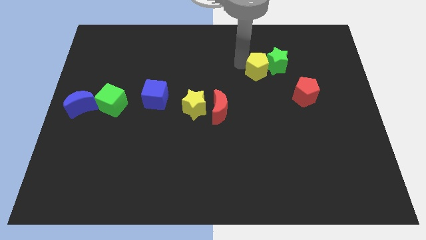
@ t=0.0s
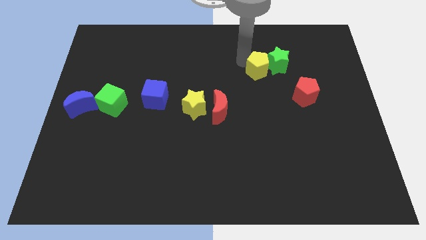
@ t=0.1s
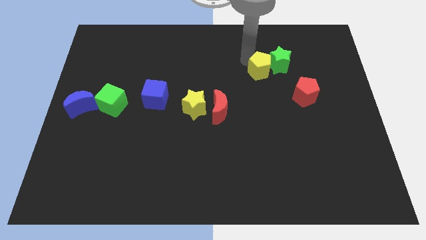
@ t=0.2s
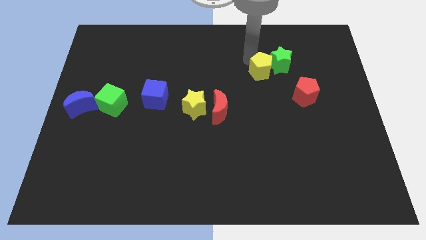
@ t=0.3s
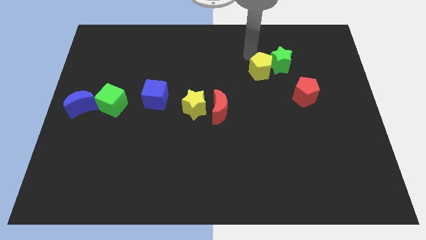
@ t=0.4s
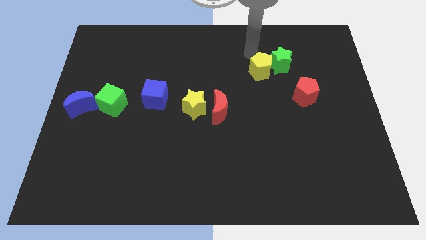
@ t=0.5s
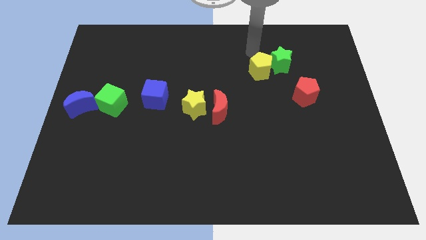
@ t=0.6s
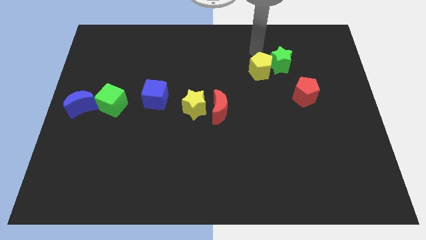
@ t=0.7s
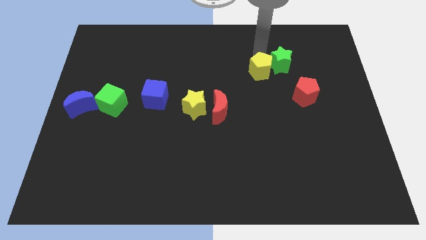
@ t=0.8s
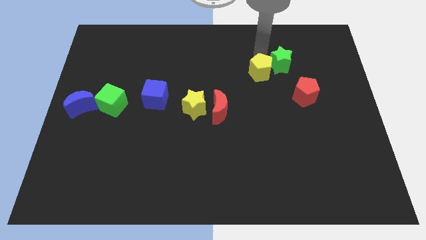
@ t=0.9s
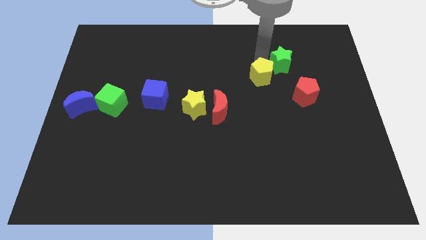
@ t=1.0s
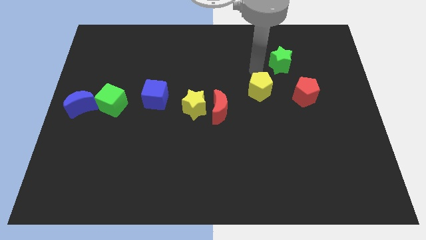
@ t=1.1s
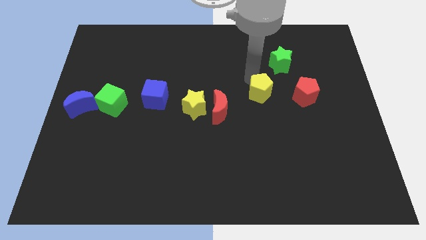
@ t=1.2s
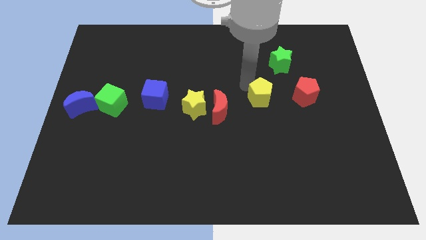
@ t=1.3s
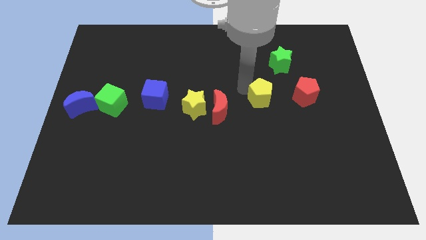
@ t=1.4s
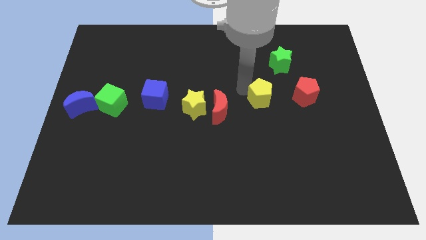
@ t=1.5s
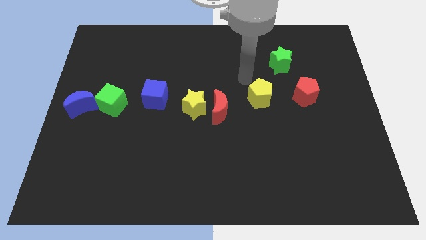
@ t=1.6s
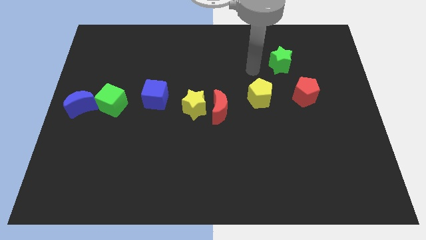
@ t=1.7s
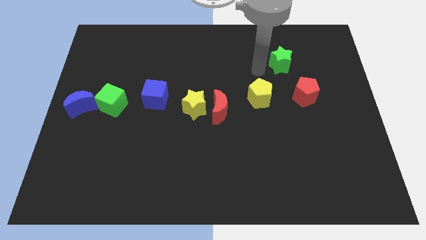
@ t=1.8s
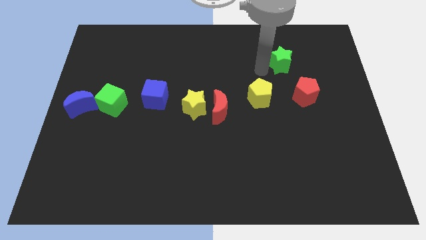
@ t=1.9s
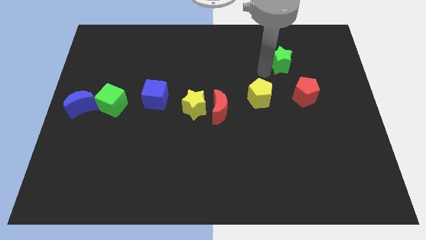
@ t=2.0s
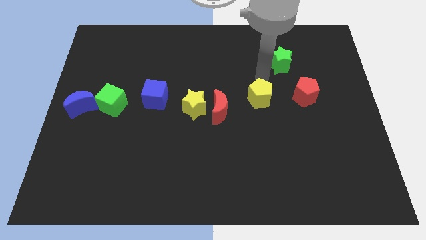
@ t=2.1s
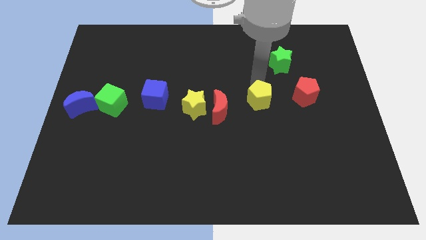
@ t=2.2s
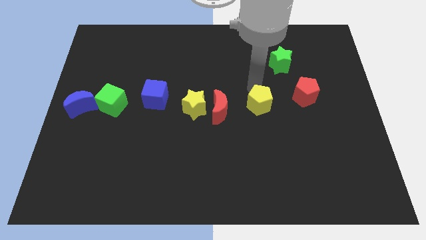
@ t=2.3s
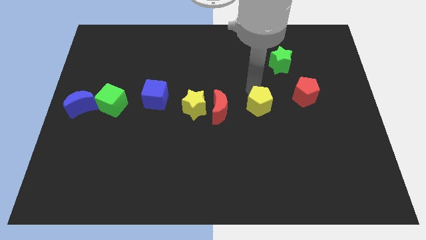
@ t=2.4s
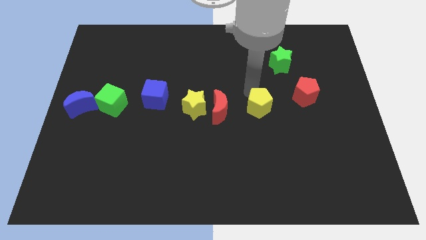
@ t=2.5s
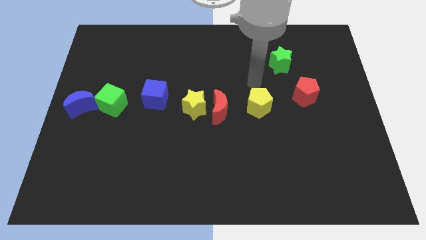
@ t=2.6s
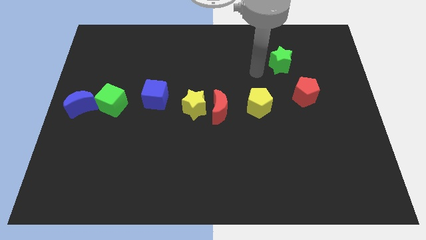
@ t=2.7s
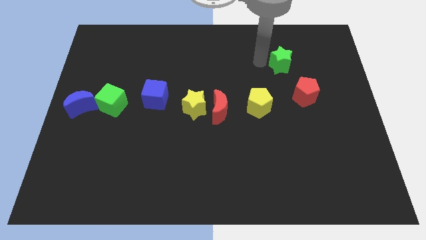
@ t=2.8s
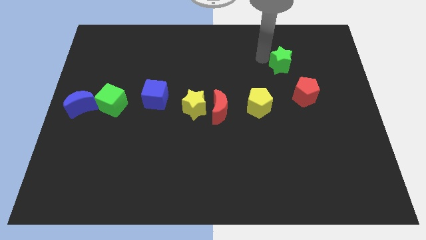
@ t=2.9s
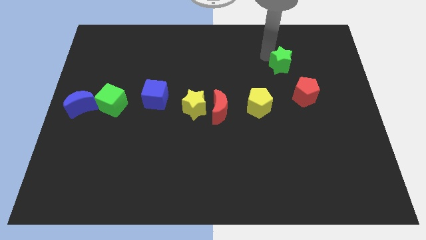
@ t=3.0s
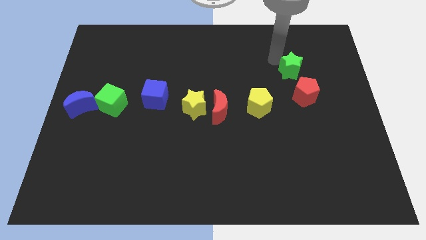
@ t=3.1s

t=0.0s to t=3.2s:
separate yellow pentagon and the green star

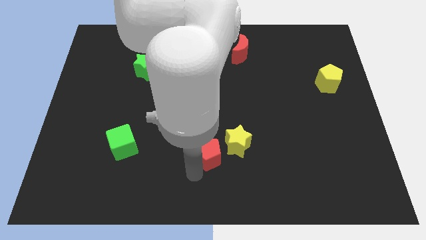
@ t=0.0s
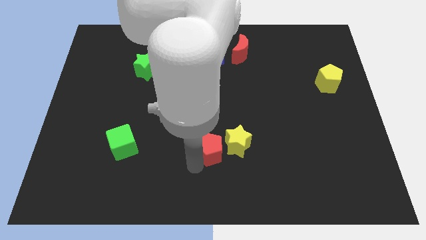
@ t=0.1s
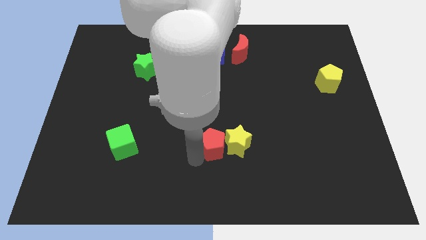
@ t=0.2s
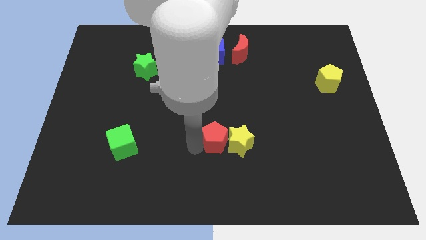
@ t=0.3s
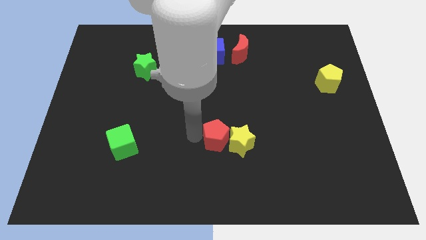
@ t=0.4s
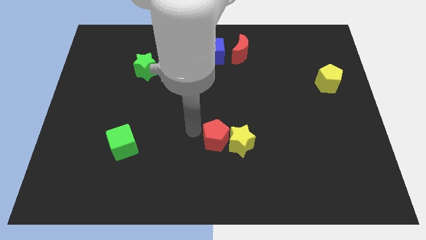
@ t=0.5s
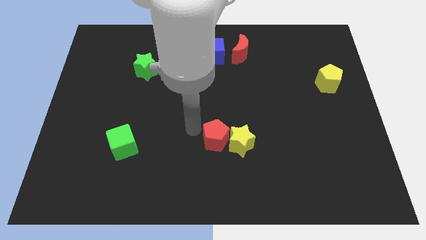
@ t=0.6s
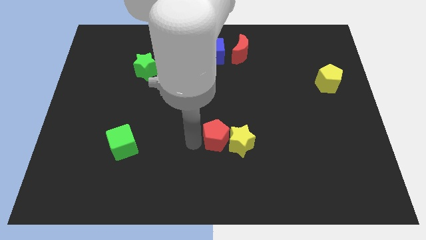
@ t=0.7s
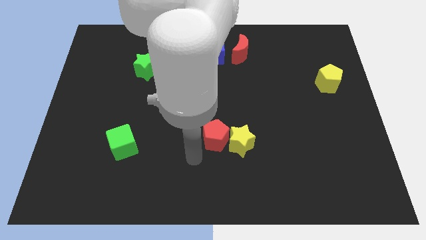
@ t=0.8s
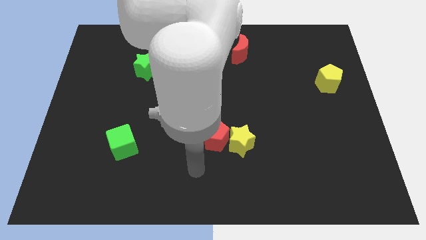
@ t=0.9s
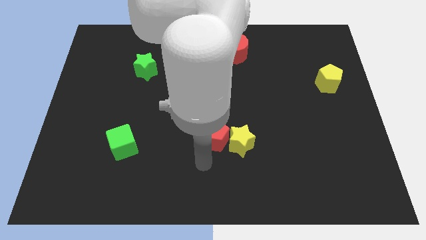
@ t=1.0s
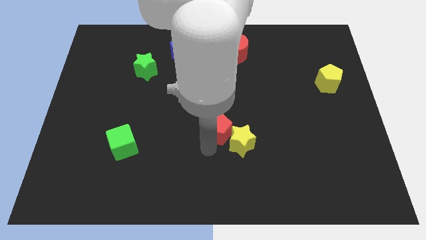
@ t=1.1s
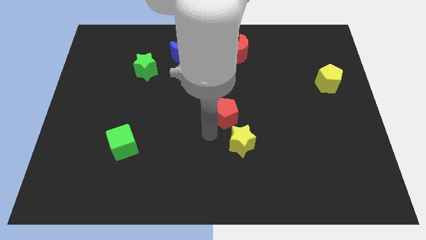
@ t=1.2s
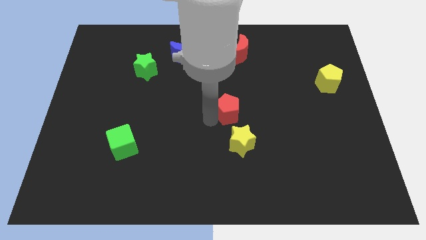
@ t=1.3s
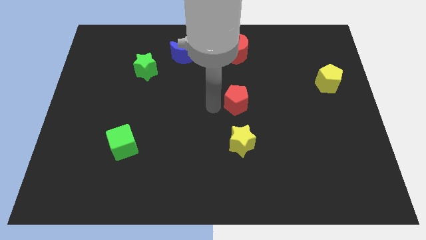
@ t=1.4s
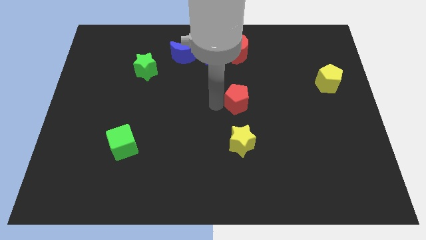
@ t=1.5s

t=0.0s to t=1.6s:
put the red pentagon above the yellow star

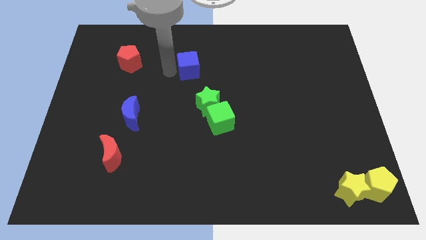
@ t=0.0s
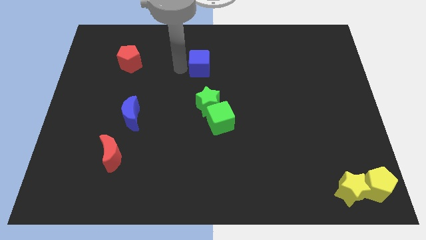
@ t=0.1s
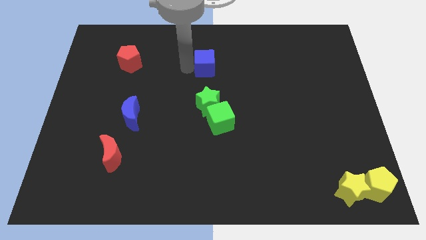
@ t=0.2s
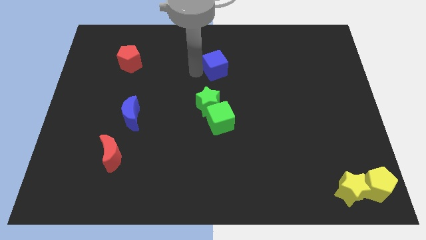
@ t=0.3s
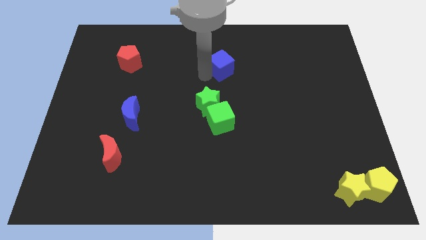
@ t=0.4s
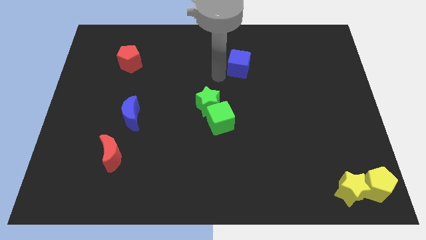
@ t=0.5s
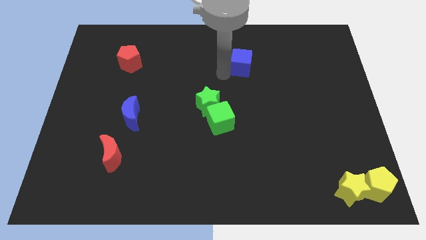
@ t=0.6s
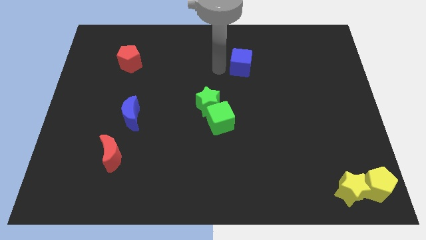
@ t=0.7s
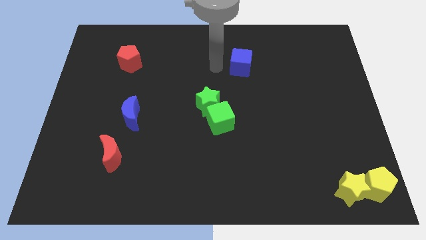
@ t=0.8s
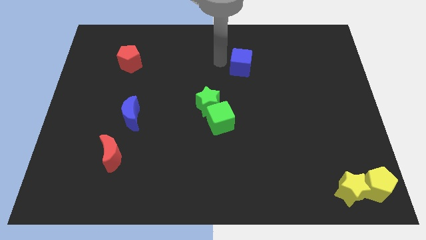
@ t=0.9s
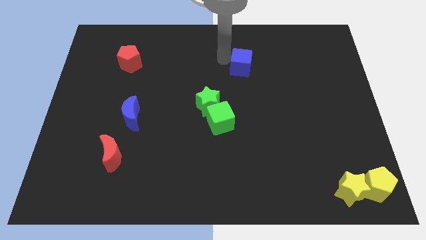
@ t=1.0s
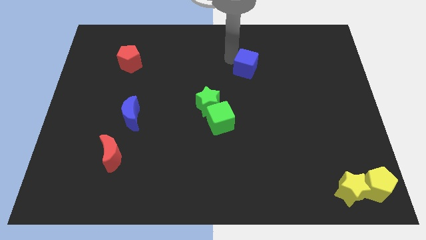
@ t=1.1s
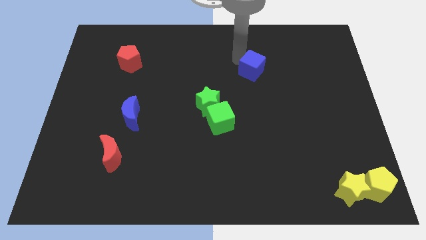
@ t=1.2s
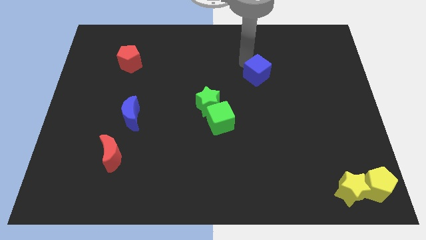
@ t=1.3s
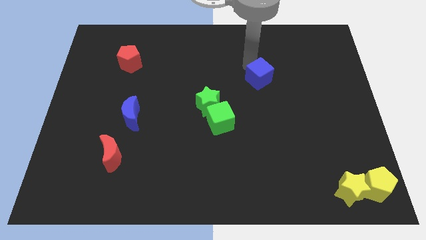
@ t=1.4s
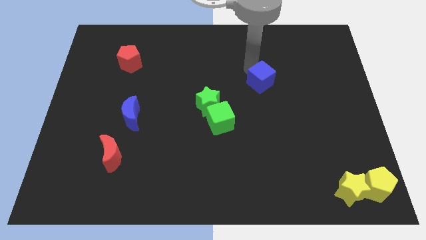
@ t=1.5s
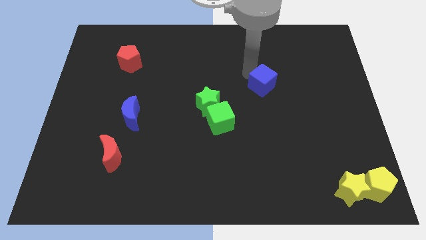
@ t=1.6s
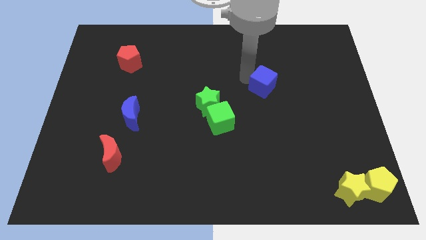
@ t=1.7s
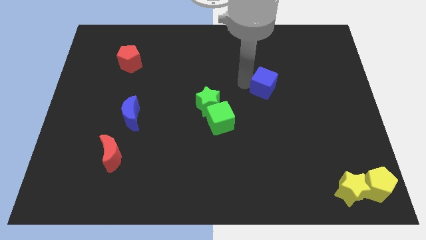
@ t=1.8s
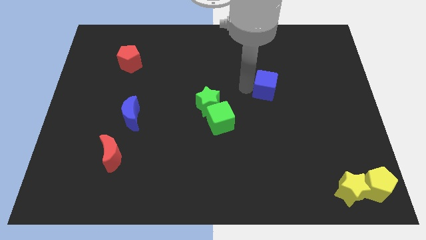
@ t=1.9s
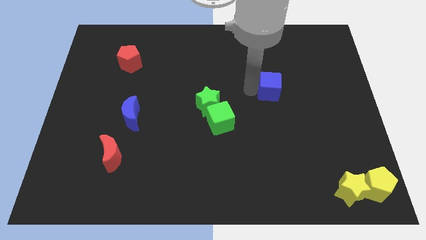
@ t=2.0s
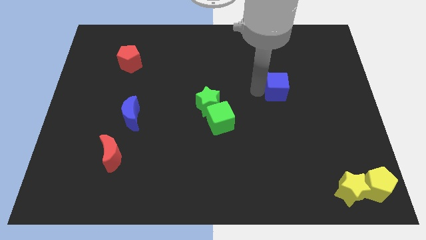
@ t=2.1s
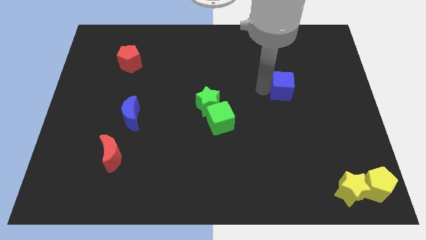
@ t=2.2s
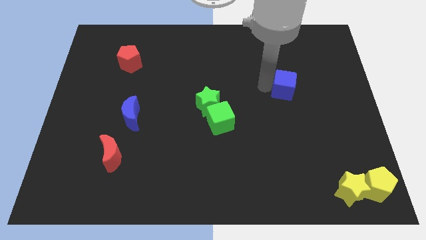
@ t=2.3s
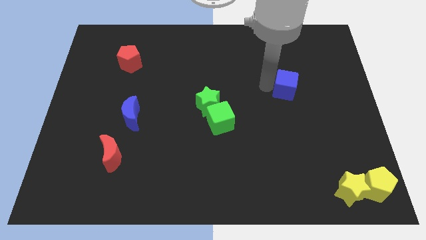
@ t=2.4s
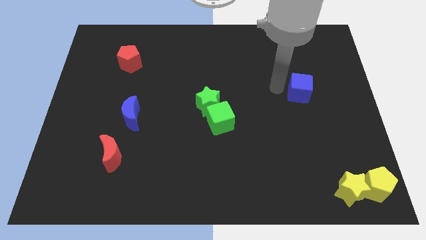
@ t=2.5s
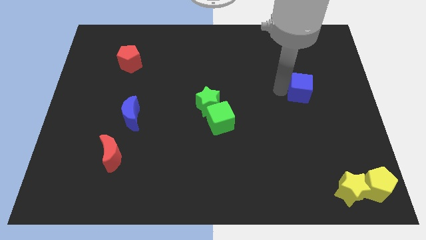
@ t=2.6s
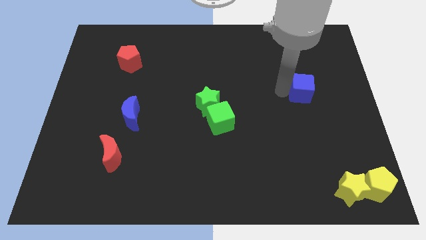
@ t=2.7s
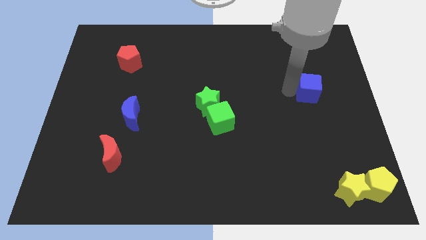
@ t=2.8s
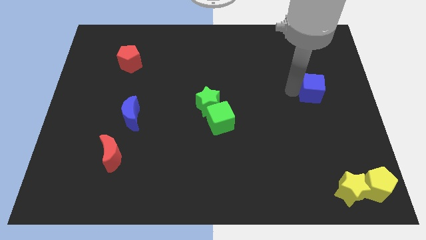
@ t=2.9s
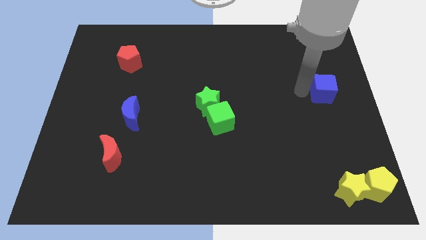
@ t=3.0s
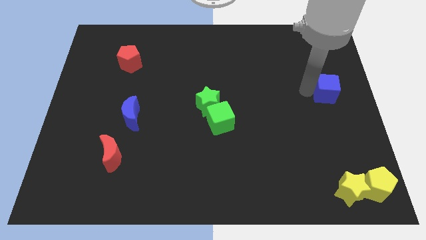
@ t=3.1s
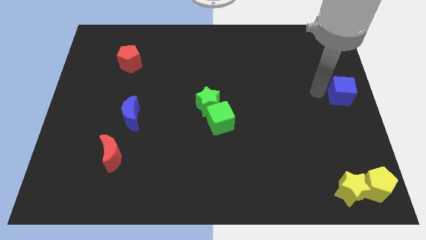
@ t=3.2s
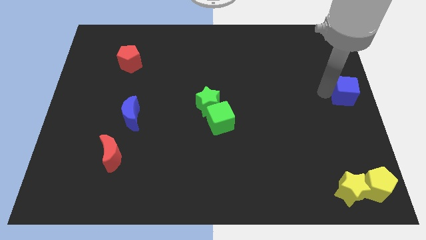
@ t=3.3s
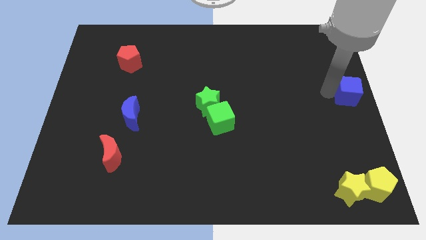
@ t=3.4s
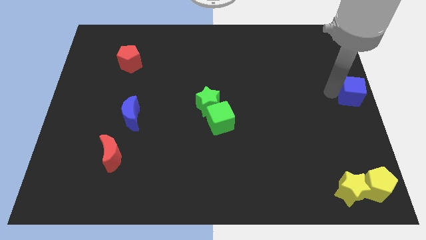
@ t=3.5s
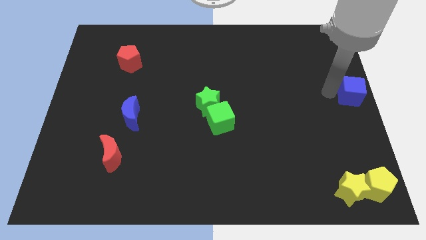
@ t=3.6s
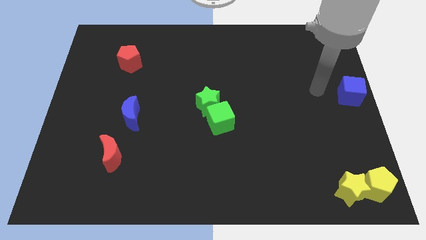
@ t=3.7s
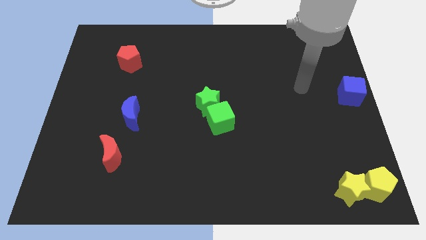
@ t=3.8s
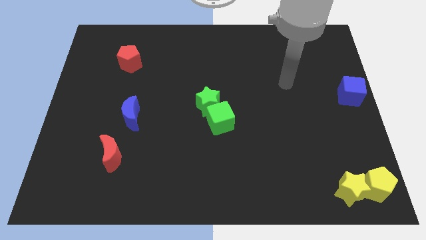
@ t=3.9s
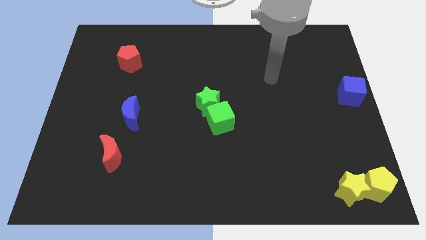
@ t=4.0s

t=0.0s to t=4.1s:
place the blue cube above the yellow pentagon
